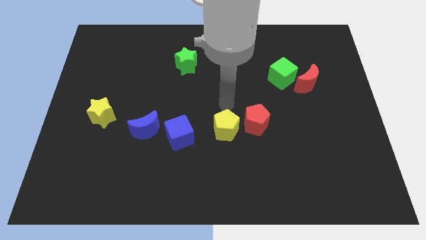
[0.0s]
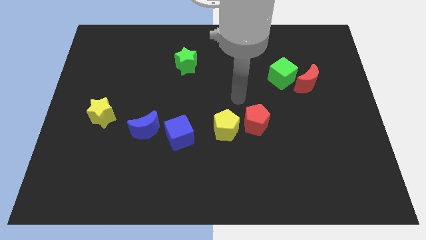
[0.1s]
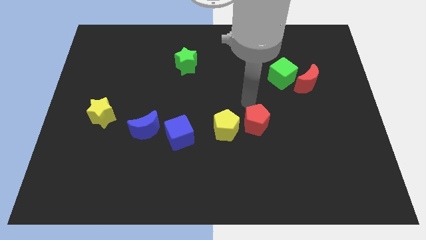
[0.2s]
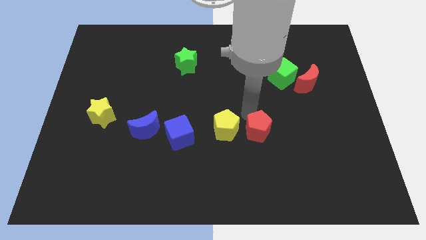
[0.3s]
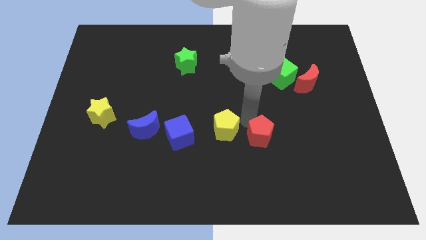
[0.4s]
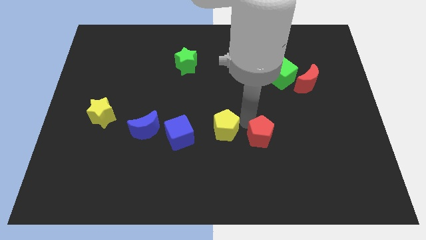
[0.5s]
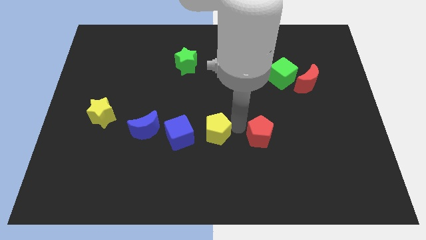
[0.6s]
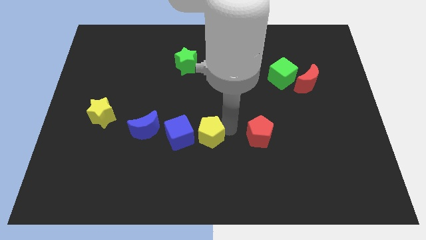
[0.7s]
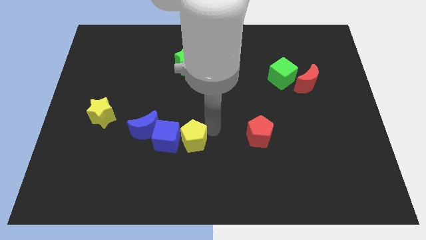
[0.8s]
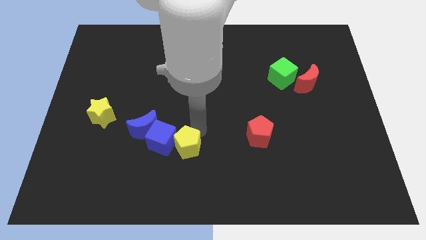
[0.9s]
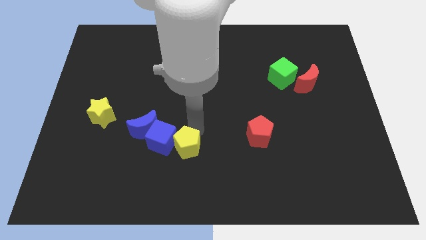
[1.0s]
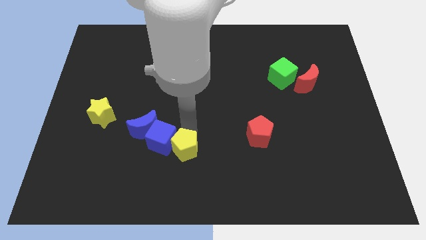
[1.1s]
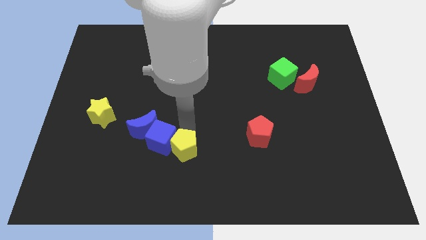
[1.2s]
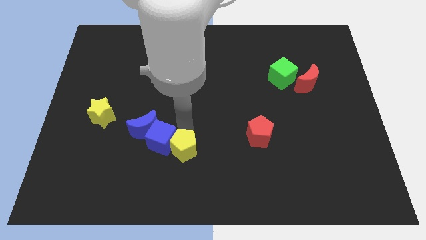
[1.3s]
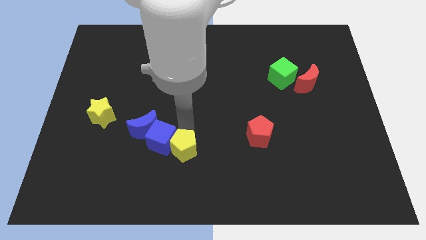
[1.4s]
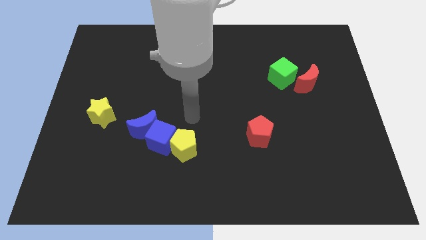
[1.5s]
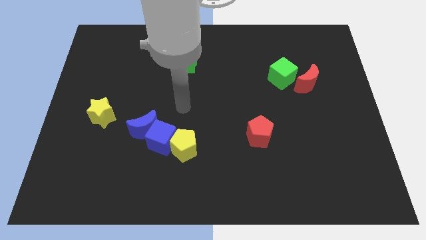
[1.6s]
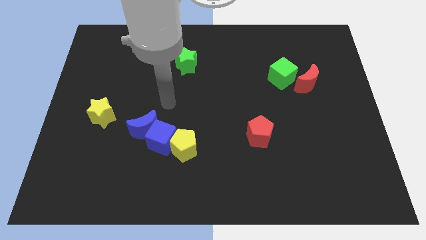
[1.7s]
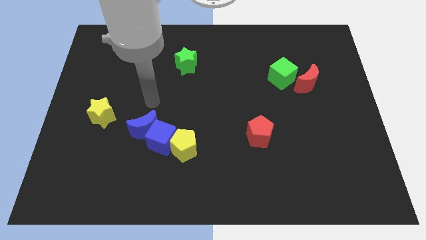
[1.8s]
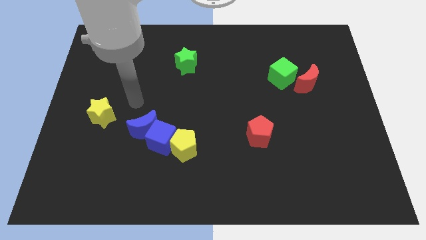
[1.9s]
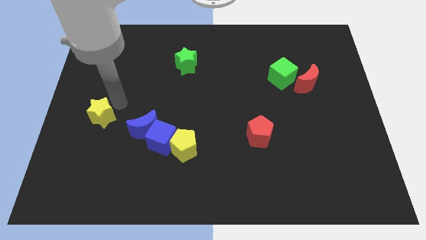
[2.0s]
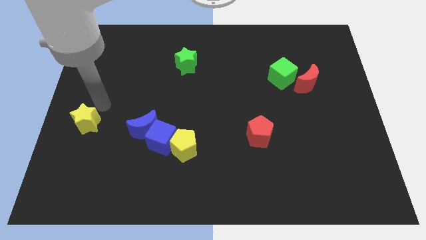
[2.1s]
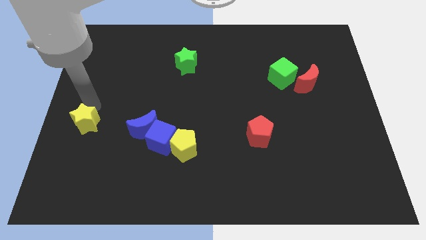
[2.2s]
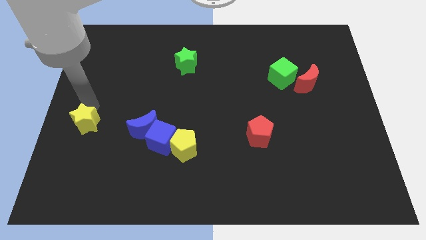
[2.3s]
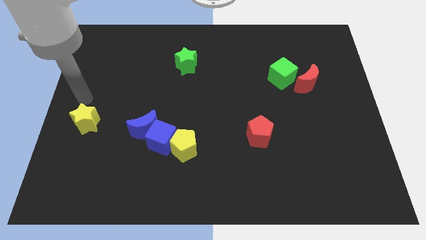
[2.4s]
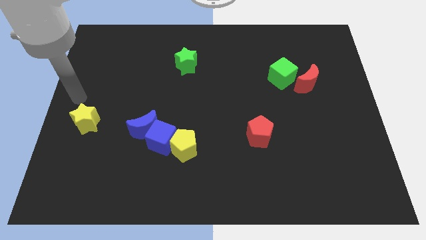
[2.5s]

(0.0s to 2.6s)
move yellow pentagon close to blue moon

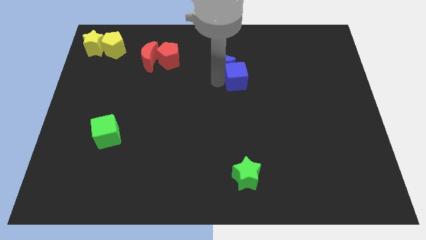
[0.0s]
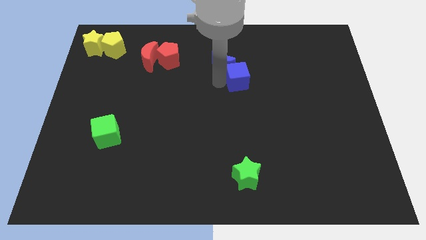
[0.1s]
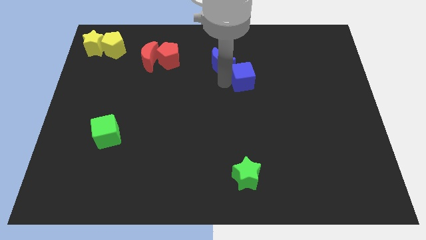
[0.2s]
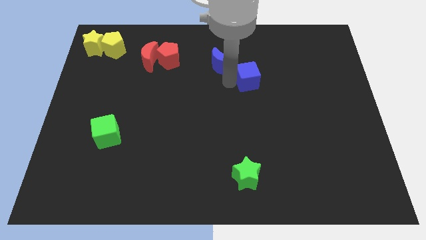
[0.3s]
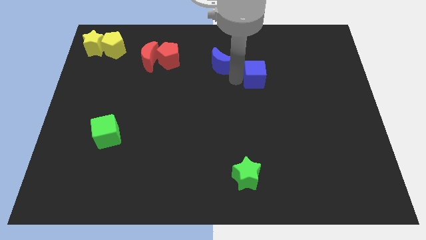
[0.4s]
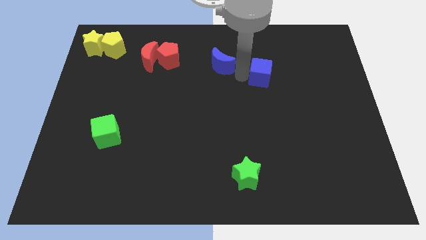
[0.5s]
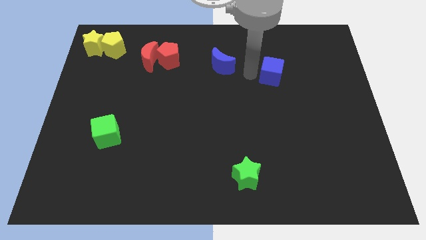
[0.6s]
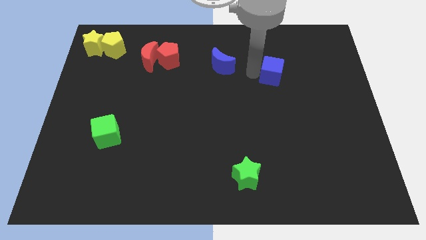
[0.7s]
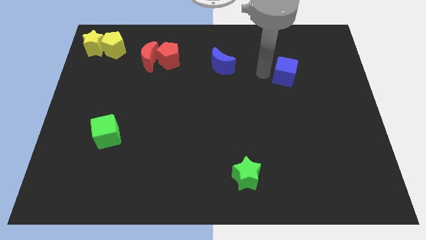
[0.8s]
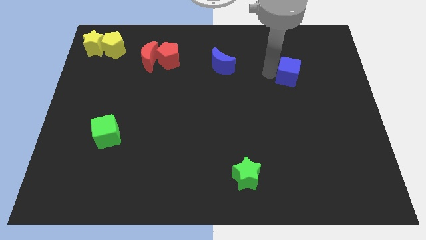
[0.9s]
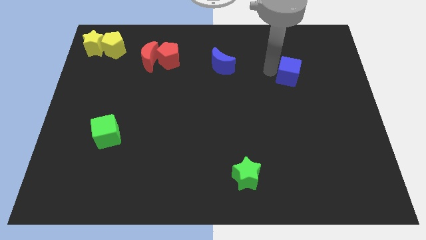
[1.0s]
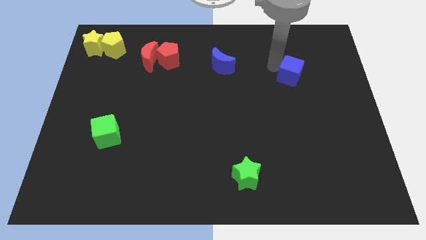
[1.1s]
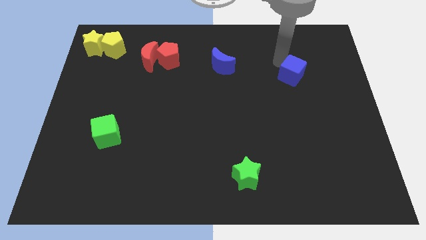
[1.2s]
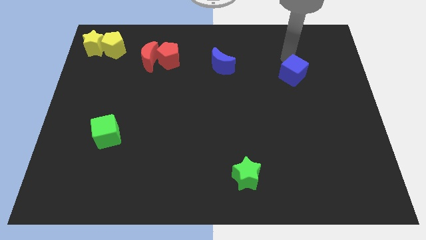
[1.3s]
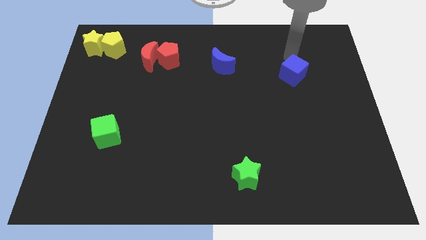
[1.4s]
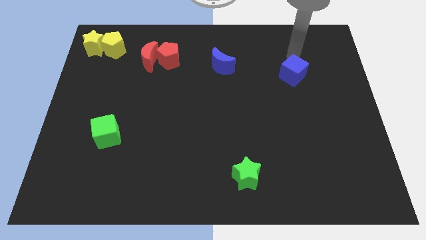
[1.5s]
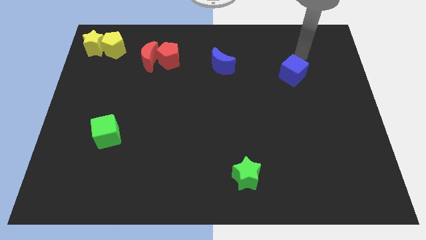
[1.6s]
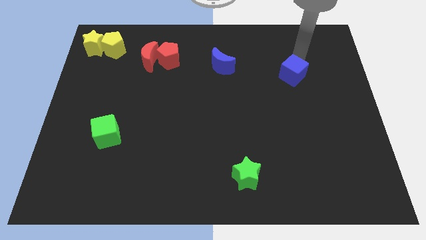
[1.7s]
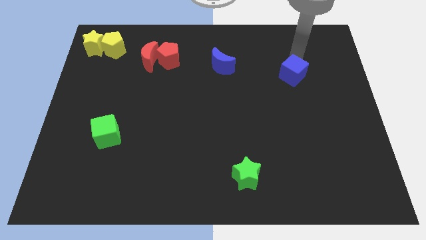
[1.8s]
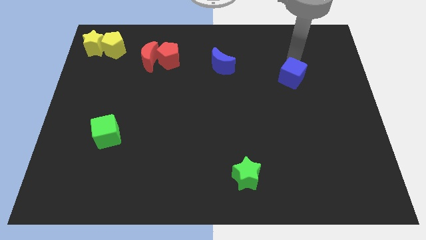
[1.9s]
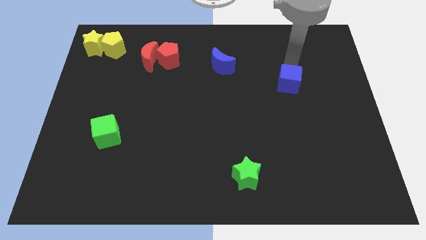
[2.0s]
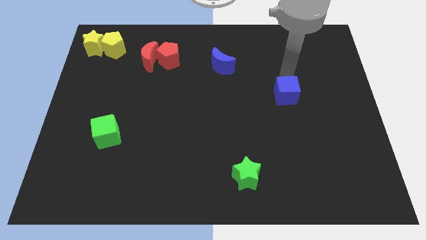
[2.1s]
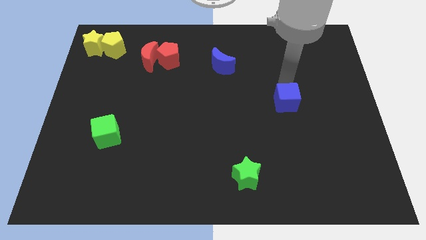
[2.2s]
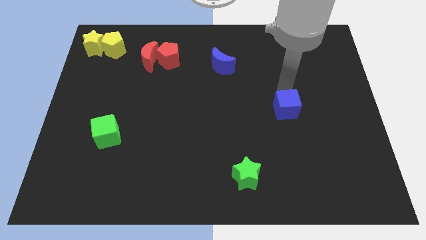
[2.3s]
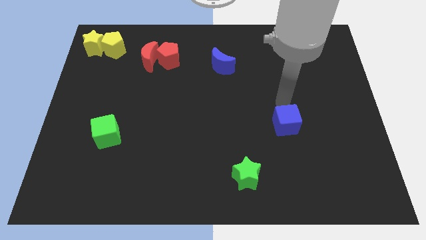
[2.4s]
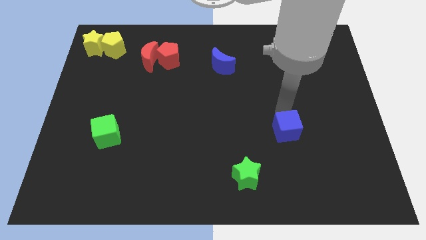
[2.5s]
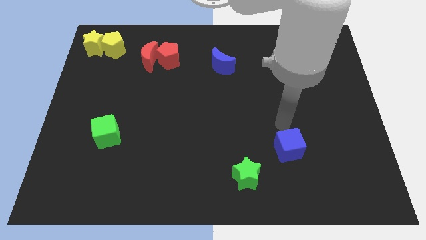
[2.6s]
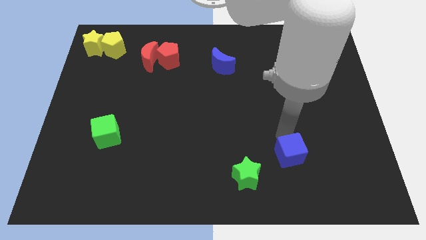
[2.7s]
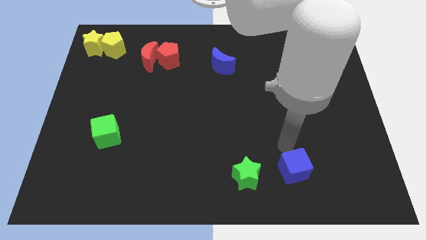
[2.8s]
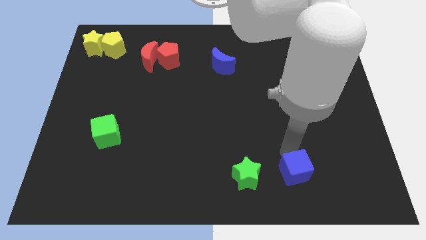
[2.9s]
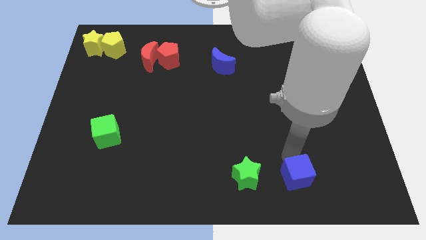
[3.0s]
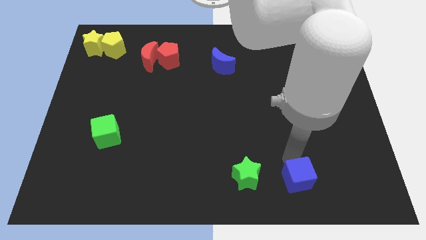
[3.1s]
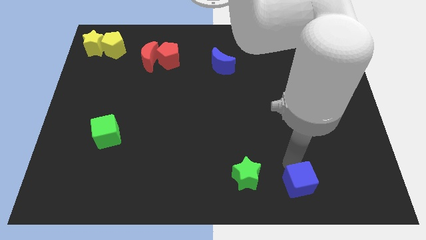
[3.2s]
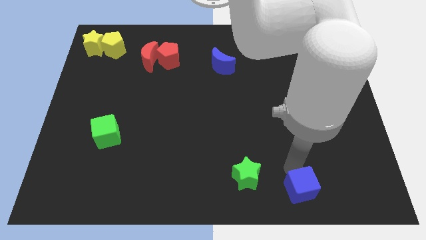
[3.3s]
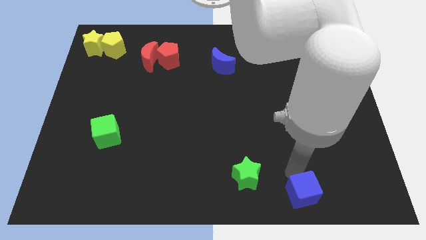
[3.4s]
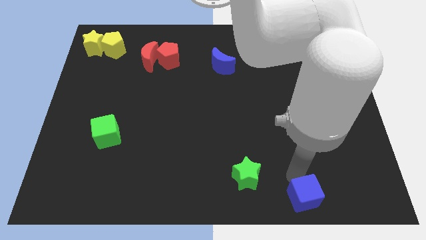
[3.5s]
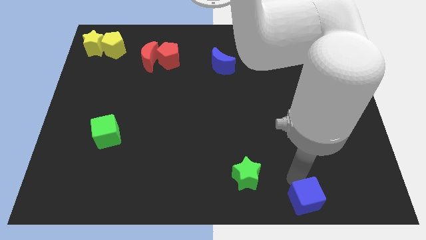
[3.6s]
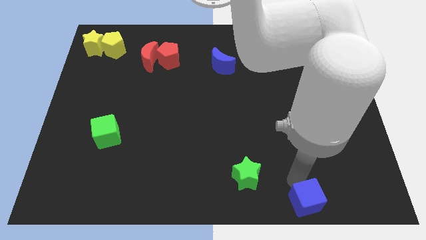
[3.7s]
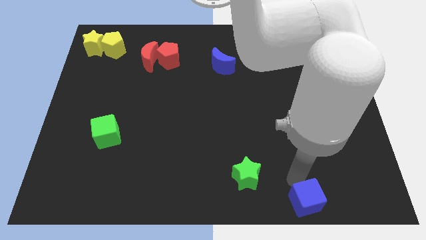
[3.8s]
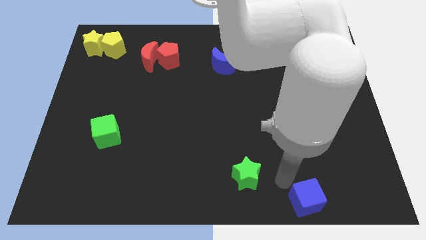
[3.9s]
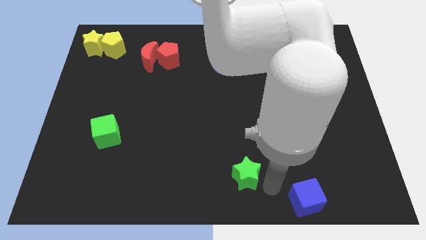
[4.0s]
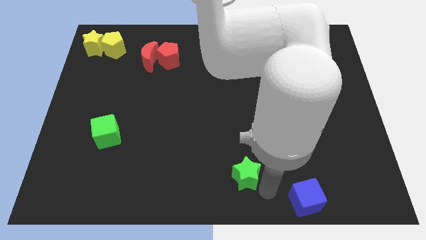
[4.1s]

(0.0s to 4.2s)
separate blue cube from blue moon

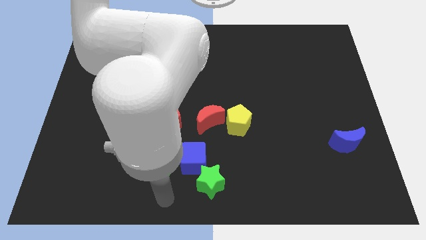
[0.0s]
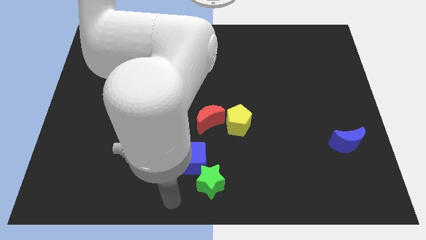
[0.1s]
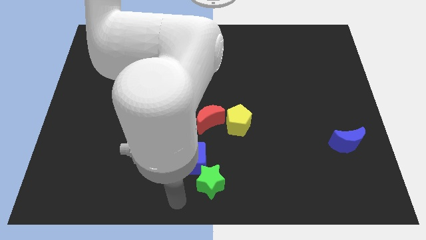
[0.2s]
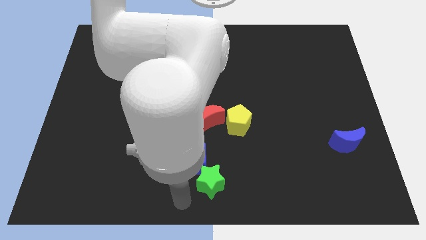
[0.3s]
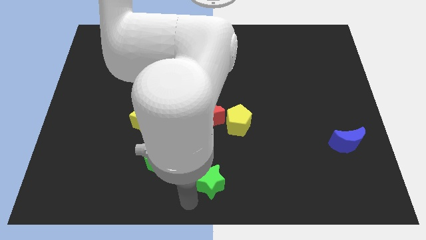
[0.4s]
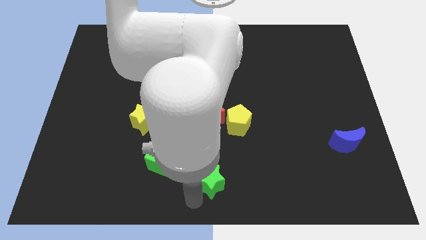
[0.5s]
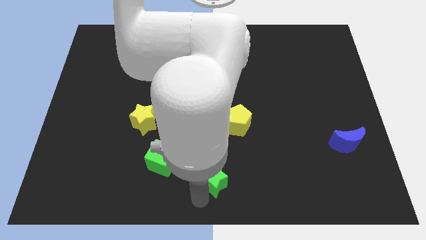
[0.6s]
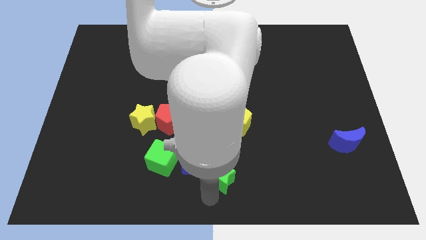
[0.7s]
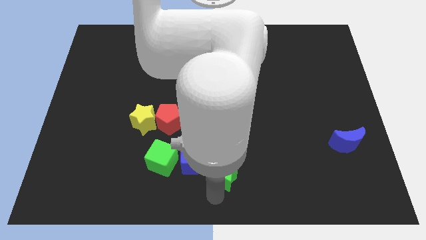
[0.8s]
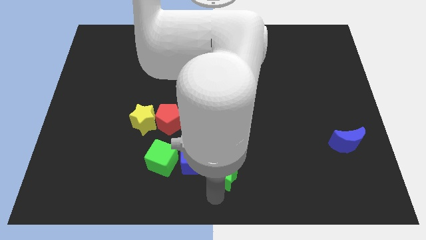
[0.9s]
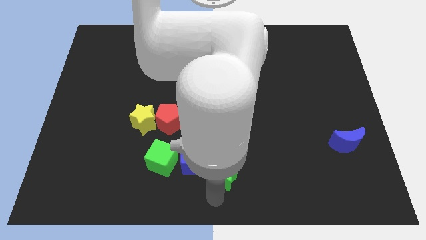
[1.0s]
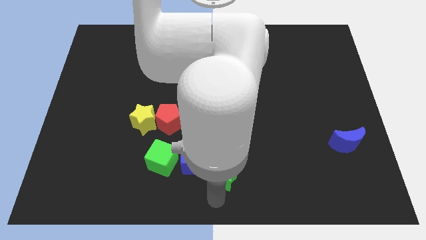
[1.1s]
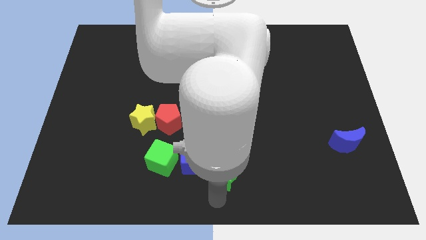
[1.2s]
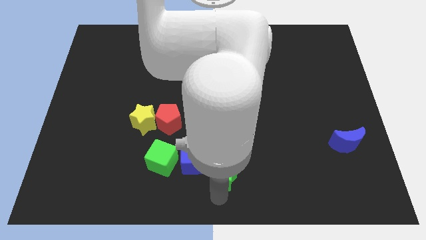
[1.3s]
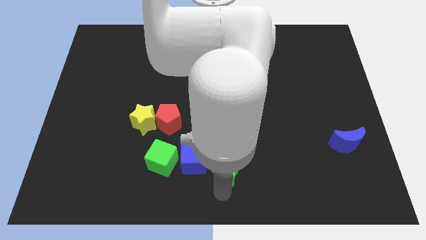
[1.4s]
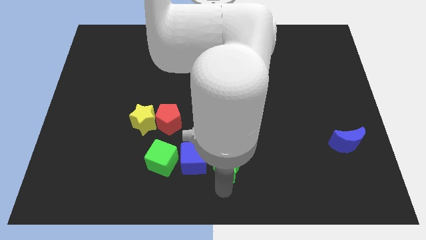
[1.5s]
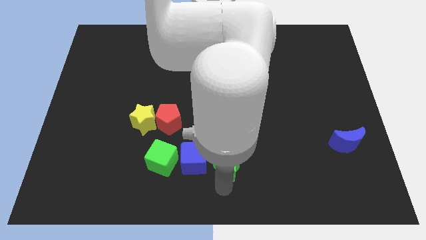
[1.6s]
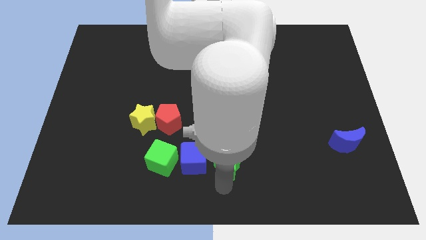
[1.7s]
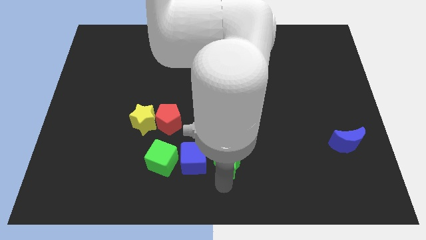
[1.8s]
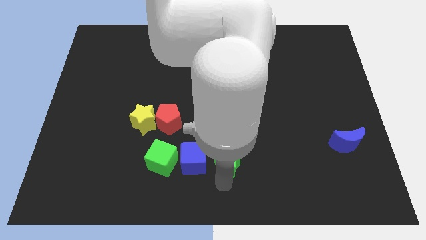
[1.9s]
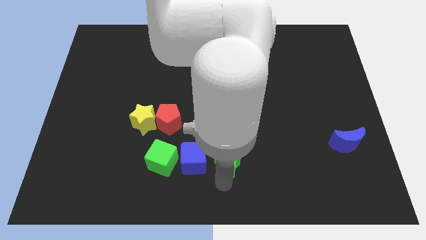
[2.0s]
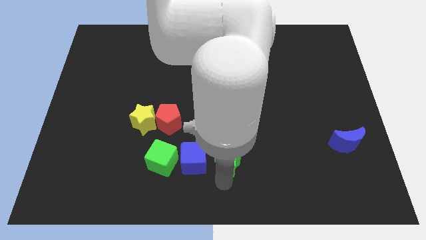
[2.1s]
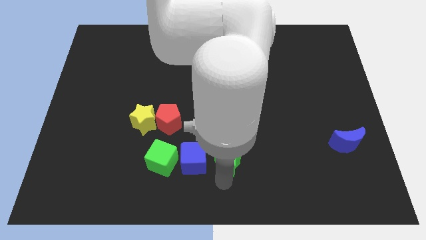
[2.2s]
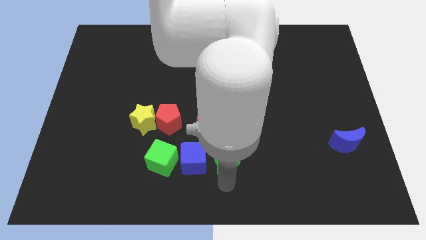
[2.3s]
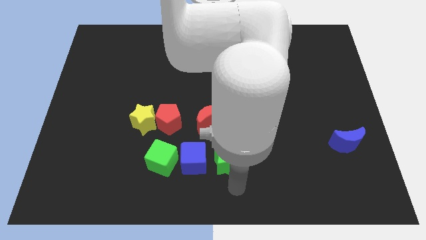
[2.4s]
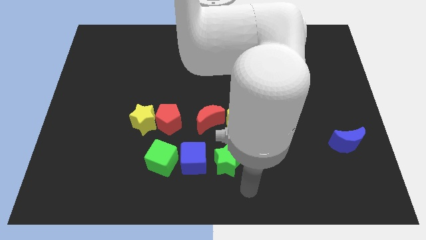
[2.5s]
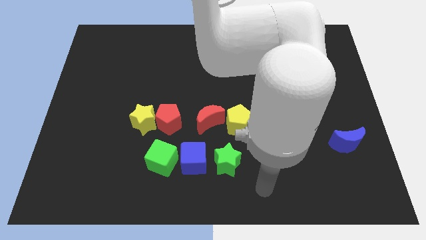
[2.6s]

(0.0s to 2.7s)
place the green star to the right of the blue cube
